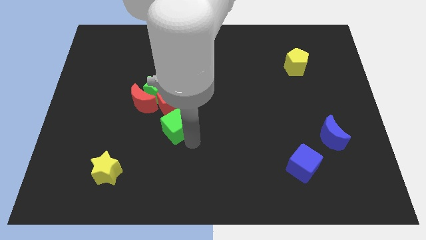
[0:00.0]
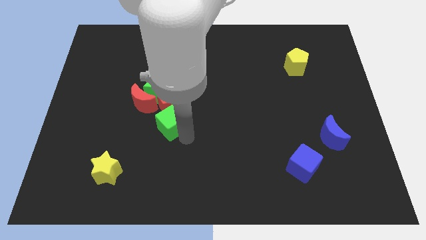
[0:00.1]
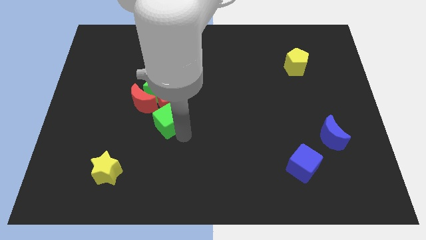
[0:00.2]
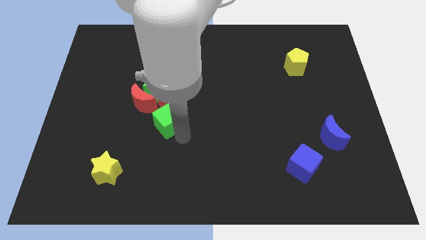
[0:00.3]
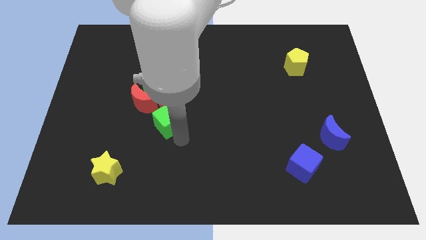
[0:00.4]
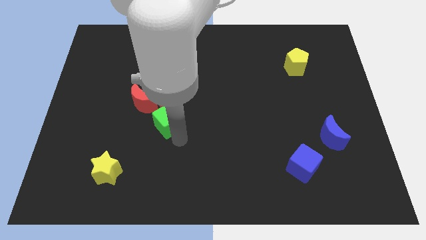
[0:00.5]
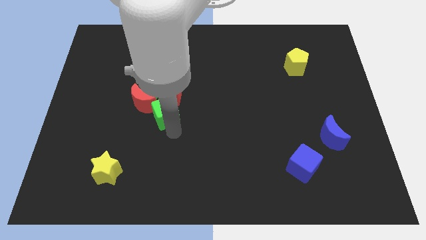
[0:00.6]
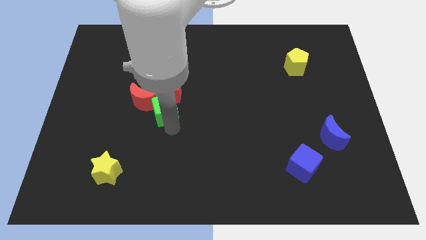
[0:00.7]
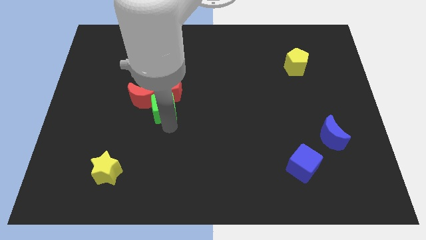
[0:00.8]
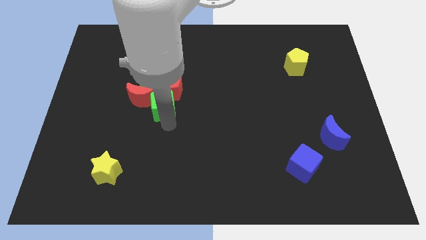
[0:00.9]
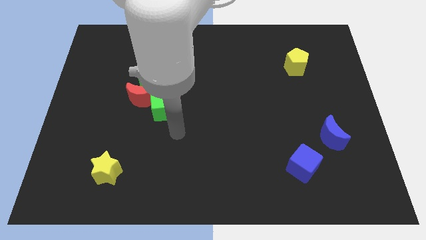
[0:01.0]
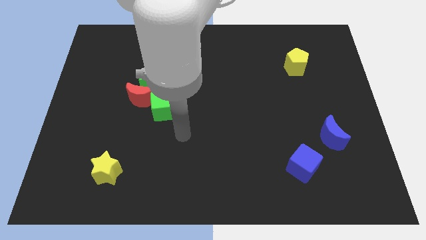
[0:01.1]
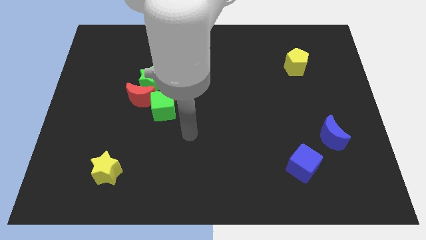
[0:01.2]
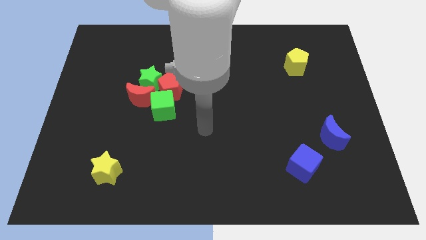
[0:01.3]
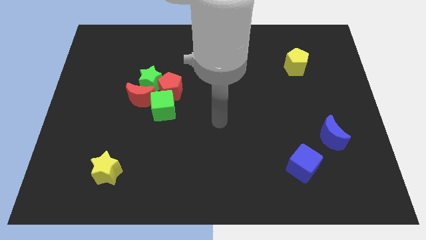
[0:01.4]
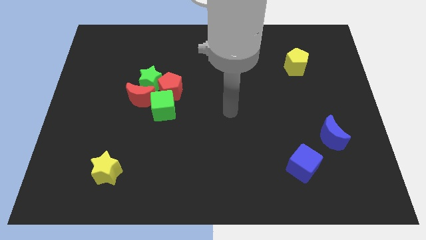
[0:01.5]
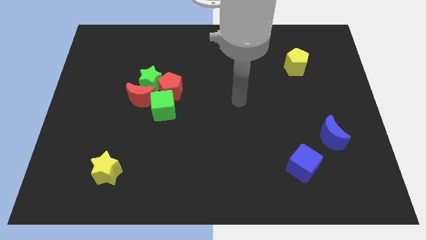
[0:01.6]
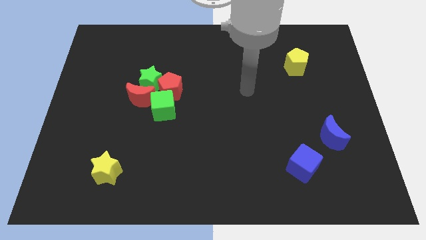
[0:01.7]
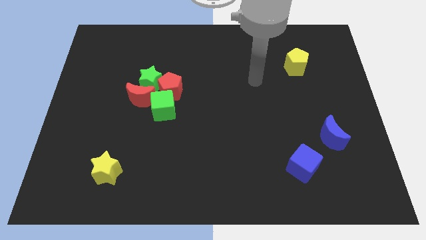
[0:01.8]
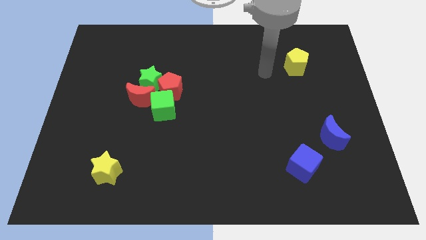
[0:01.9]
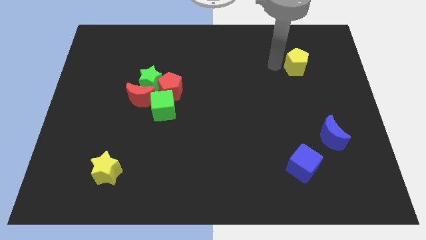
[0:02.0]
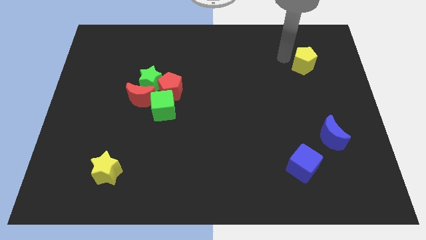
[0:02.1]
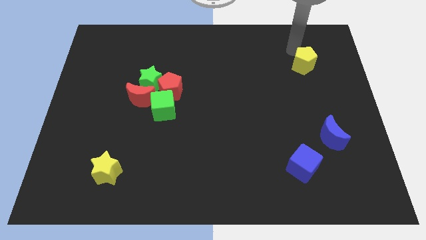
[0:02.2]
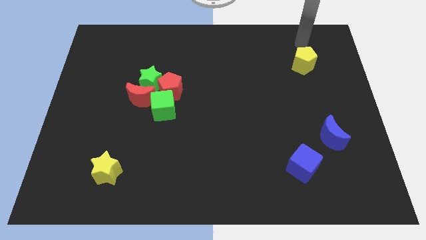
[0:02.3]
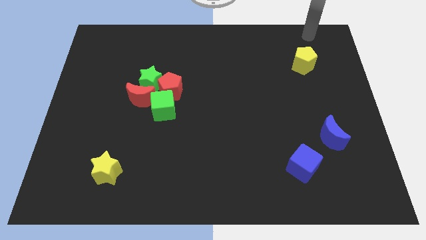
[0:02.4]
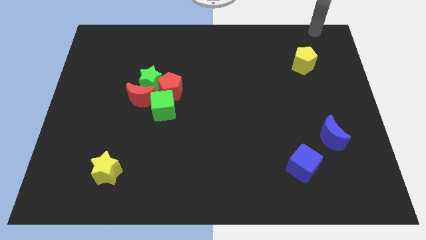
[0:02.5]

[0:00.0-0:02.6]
disturb the red pentagon red crescent using green cube

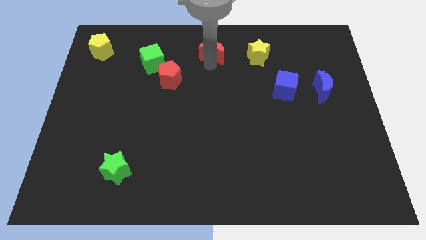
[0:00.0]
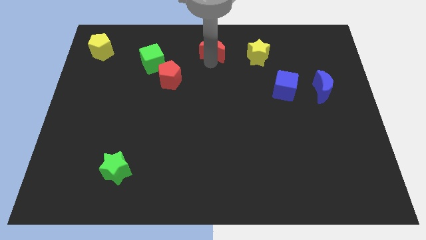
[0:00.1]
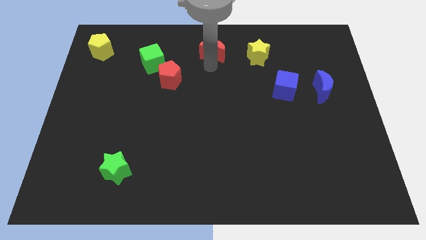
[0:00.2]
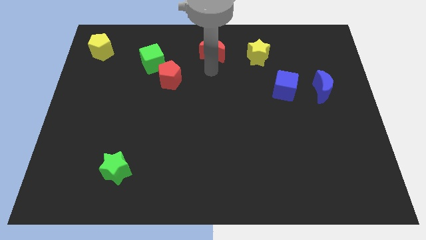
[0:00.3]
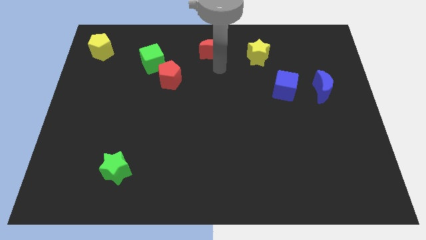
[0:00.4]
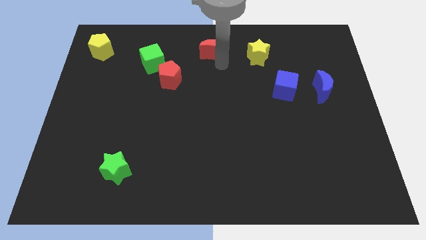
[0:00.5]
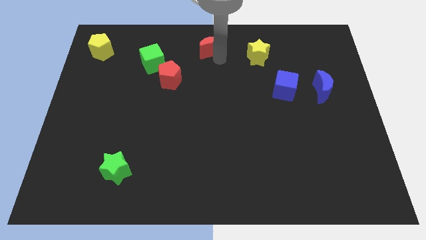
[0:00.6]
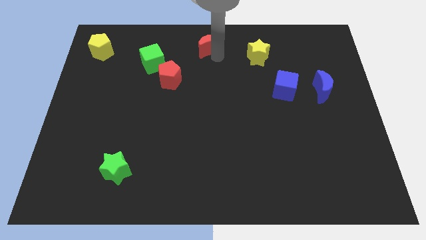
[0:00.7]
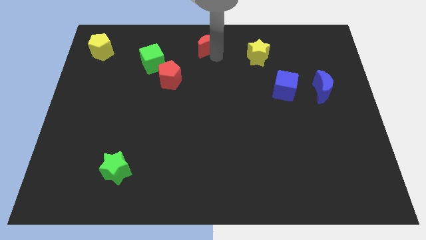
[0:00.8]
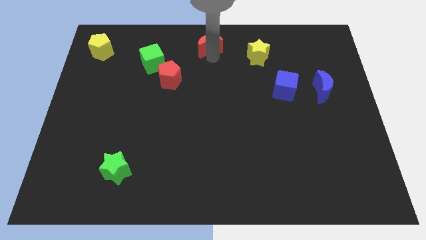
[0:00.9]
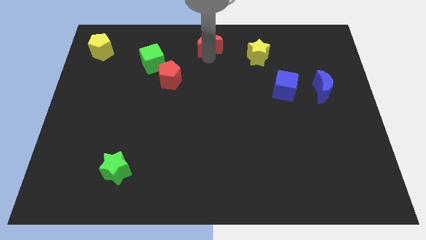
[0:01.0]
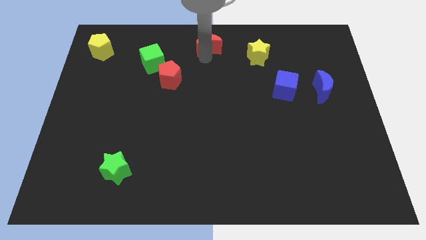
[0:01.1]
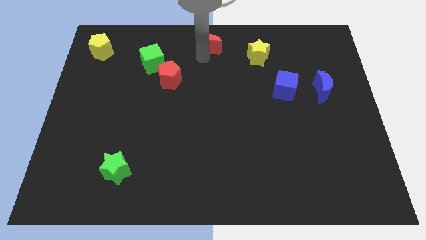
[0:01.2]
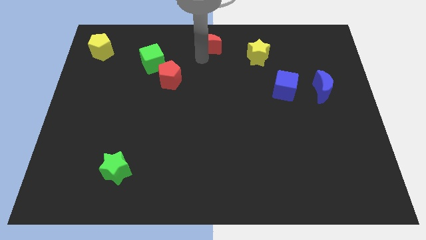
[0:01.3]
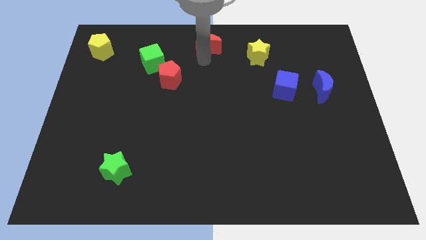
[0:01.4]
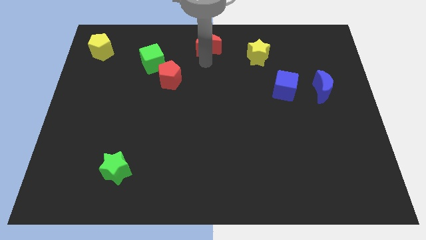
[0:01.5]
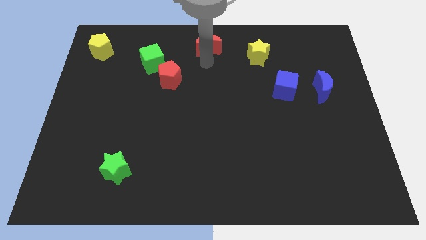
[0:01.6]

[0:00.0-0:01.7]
push the red crescent towards the top center of the board

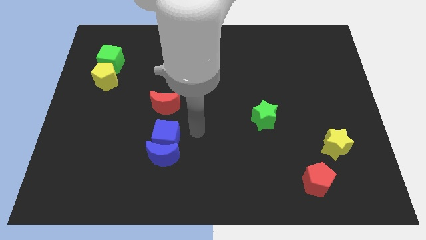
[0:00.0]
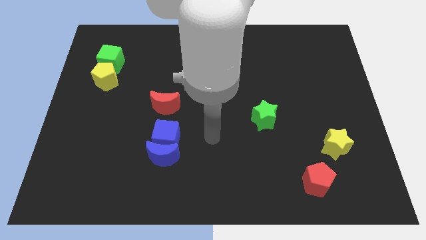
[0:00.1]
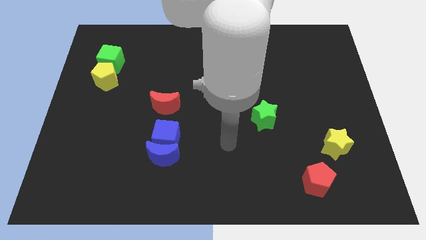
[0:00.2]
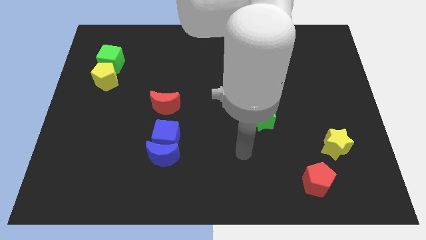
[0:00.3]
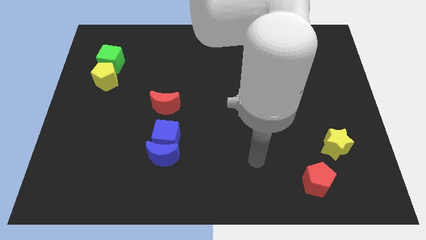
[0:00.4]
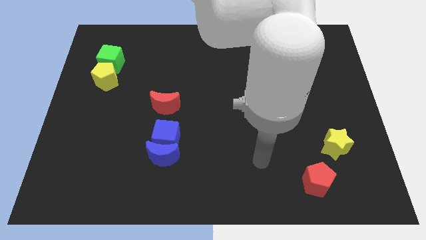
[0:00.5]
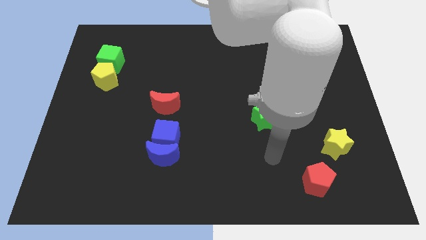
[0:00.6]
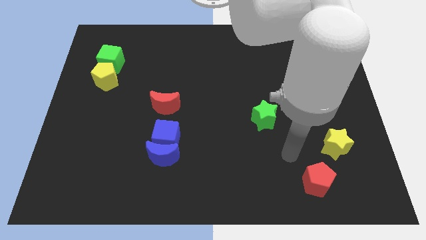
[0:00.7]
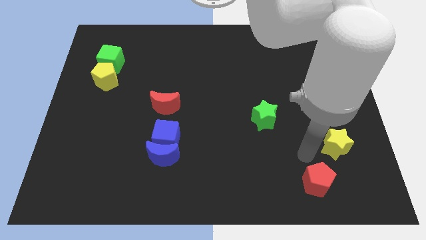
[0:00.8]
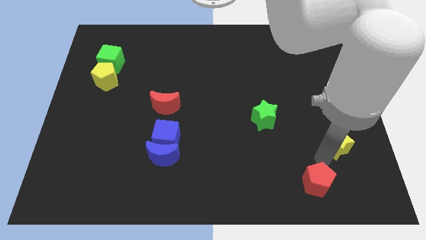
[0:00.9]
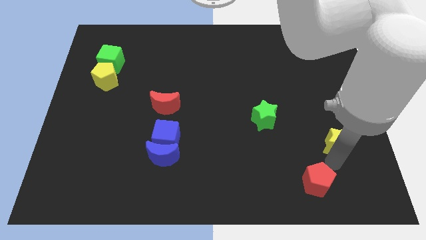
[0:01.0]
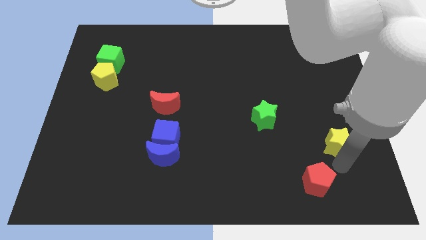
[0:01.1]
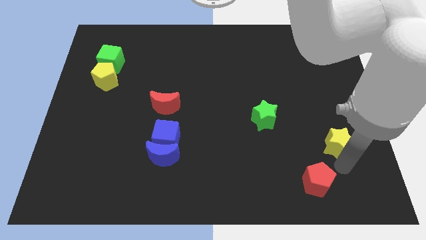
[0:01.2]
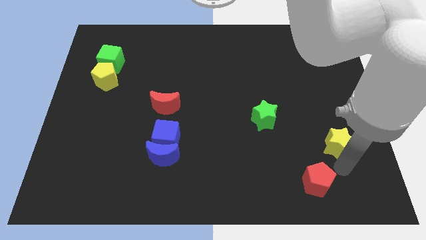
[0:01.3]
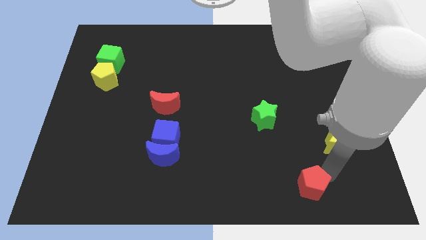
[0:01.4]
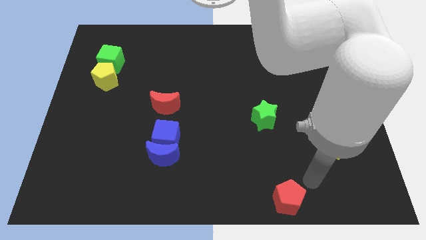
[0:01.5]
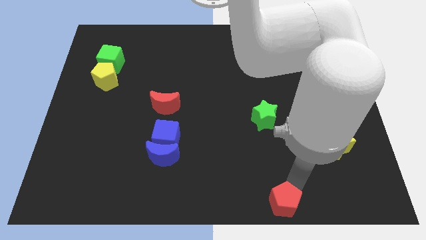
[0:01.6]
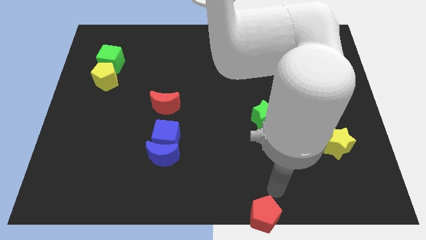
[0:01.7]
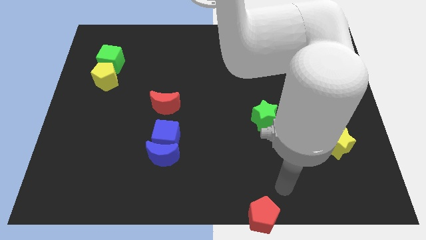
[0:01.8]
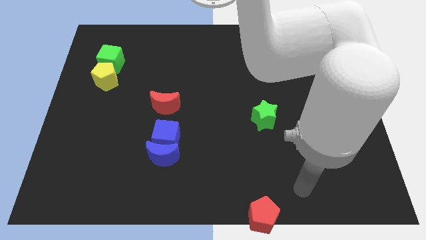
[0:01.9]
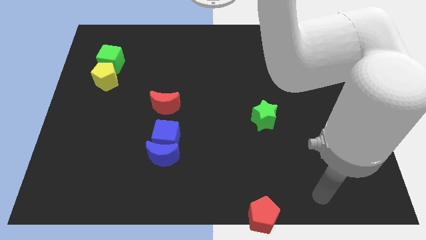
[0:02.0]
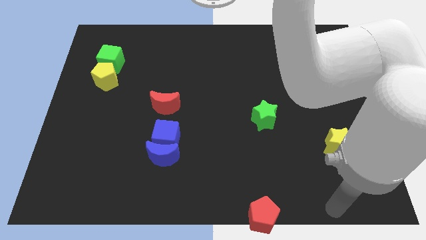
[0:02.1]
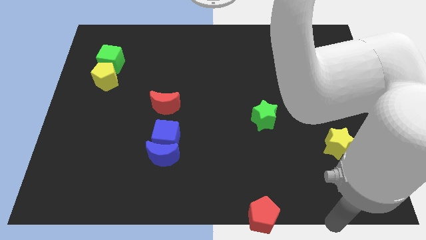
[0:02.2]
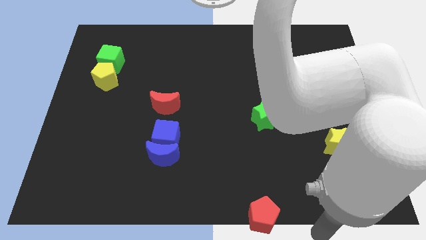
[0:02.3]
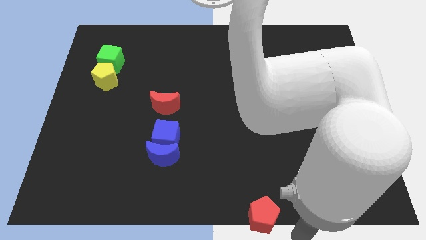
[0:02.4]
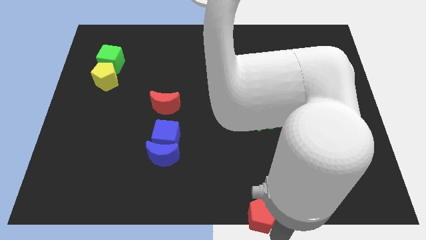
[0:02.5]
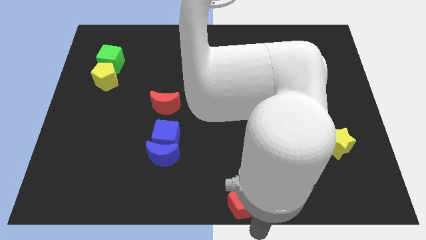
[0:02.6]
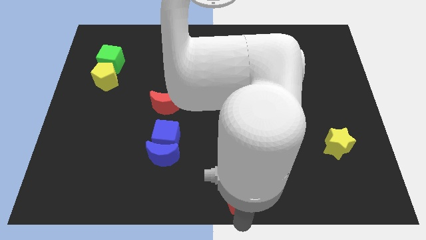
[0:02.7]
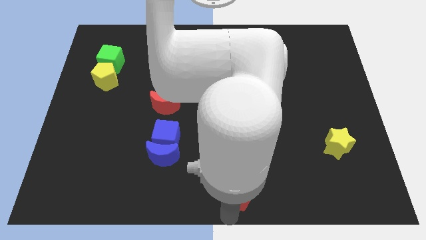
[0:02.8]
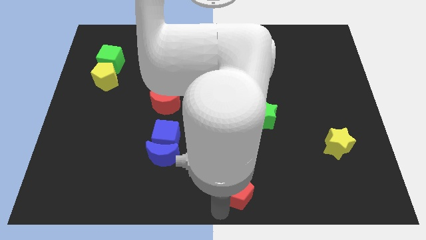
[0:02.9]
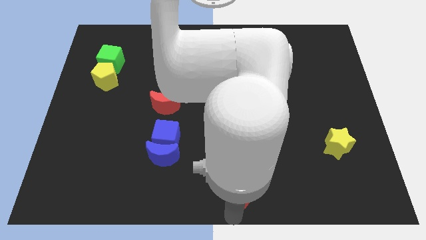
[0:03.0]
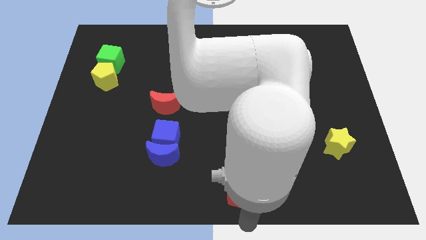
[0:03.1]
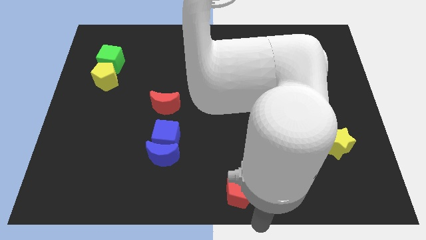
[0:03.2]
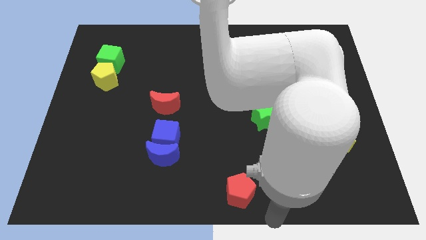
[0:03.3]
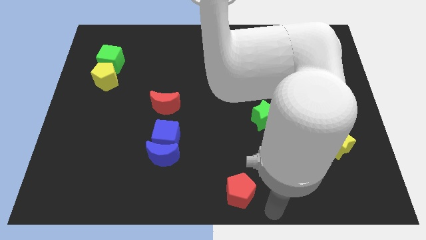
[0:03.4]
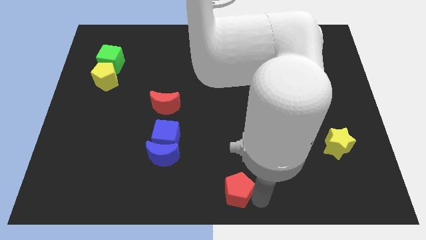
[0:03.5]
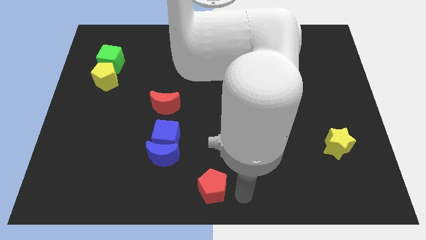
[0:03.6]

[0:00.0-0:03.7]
move the red crescent to the bottom center of the board

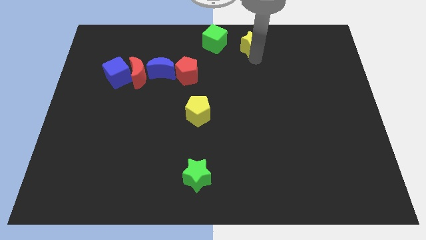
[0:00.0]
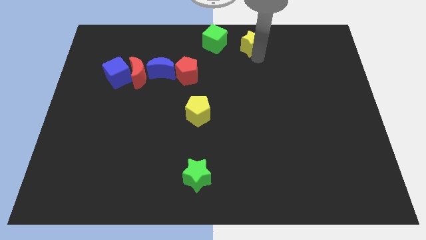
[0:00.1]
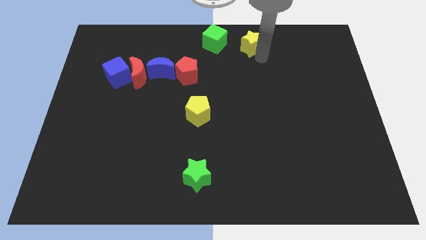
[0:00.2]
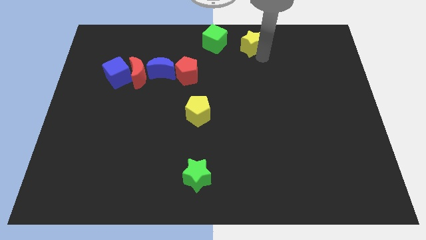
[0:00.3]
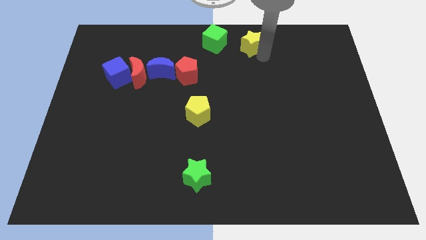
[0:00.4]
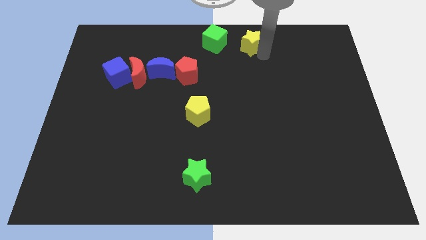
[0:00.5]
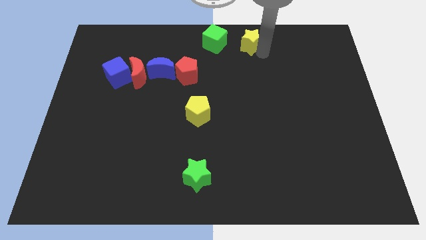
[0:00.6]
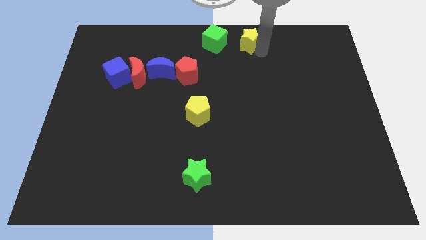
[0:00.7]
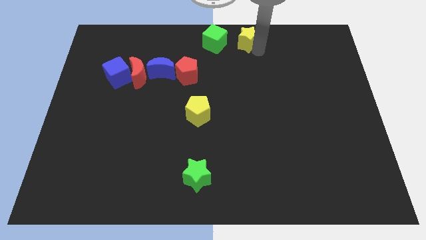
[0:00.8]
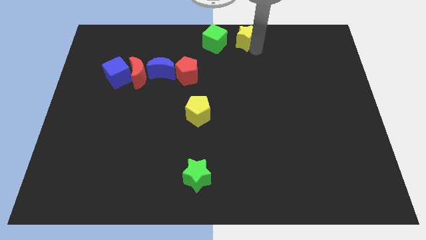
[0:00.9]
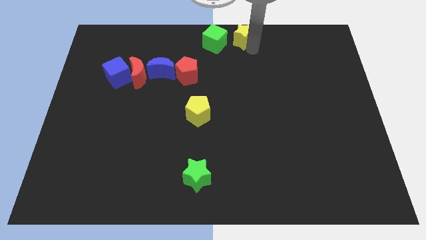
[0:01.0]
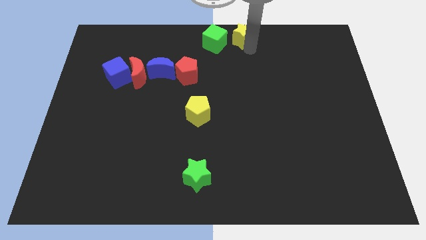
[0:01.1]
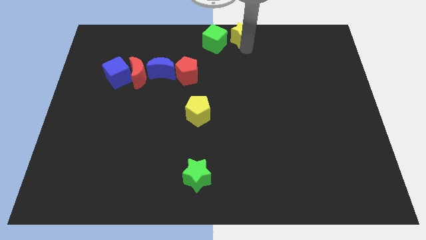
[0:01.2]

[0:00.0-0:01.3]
push the yellow star to the right of the green cube
